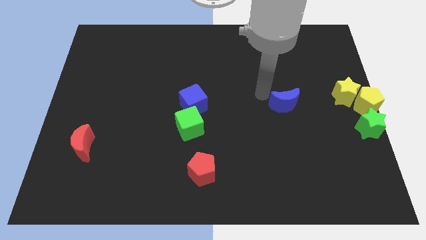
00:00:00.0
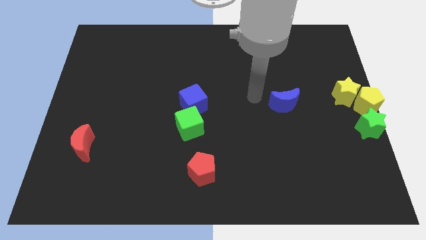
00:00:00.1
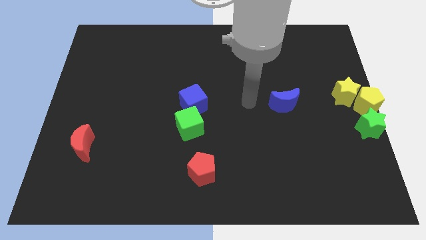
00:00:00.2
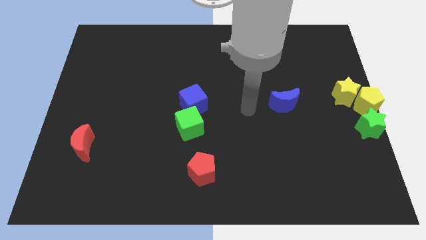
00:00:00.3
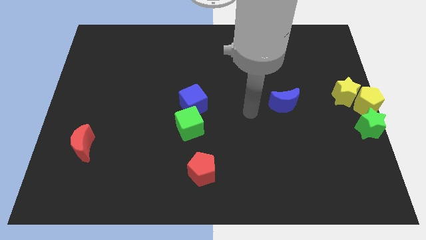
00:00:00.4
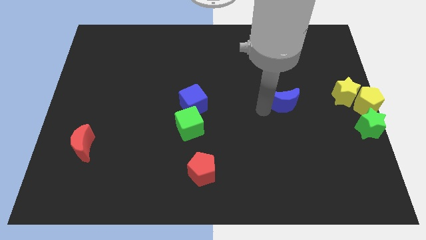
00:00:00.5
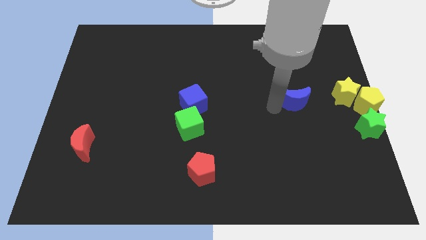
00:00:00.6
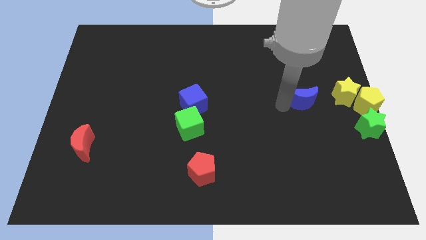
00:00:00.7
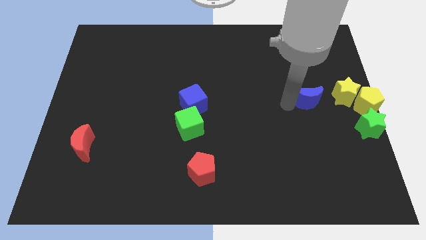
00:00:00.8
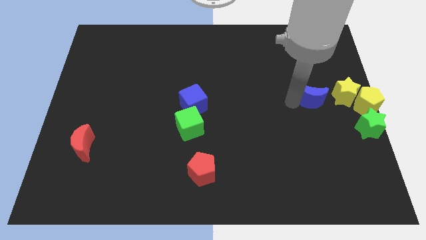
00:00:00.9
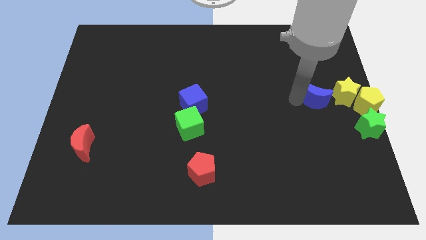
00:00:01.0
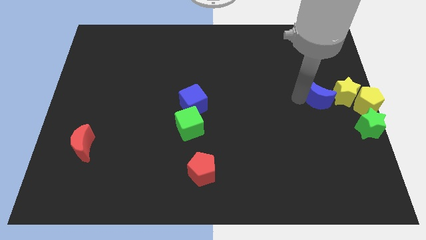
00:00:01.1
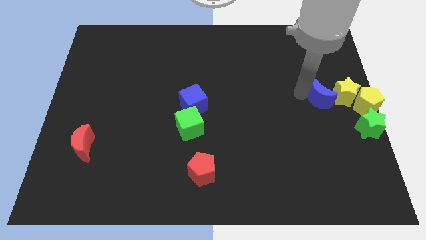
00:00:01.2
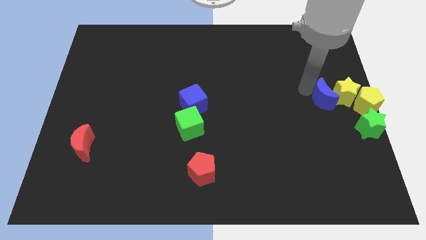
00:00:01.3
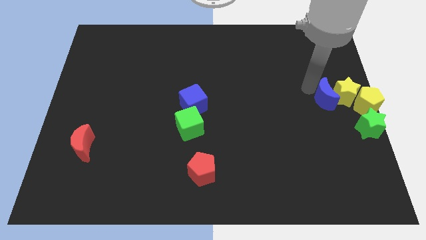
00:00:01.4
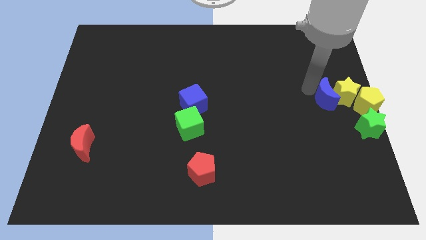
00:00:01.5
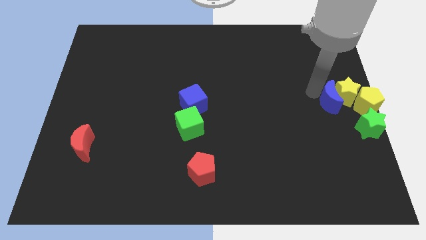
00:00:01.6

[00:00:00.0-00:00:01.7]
move blue moon close to yellow star

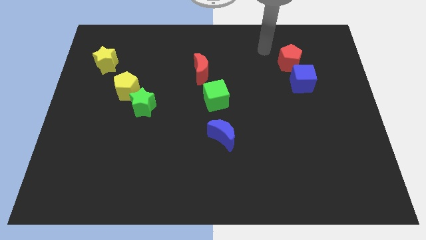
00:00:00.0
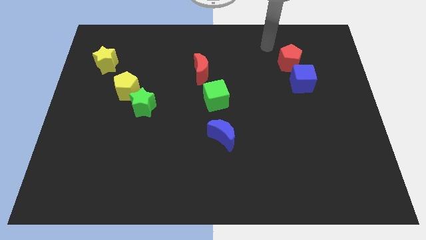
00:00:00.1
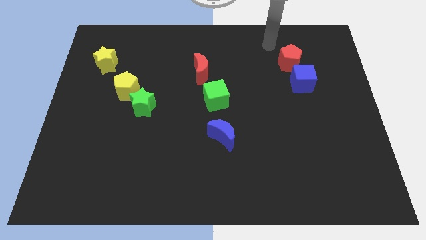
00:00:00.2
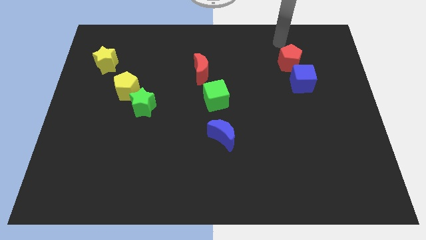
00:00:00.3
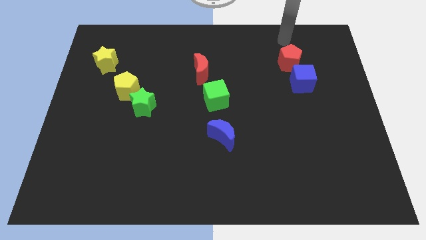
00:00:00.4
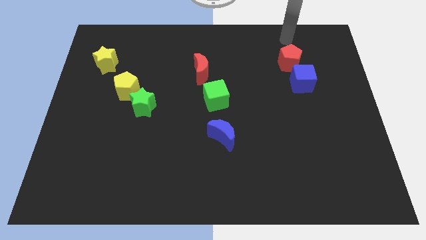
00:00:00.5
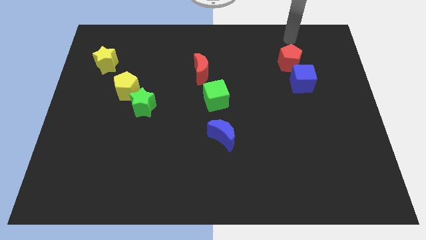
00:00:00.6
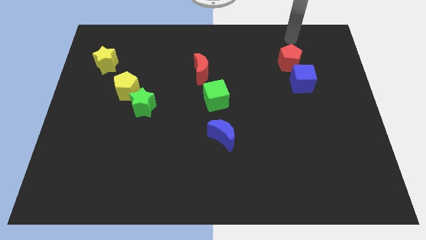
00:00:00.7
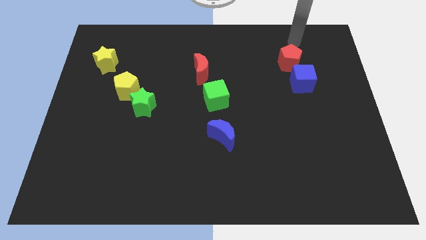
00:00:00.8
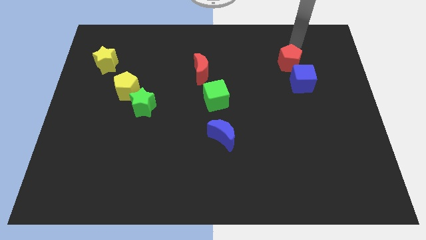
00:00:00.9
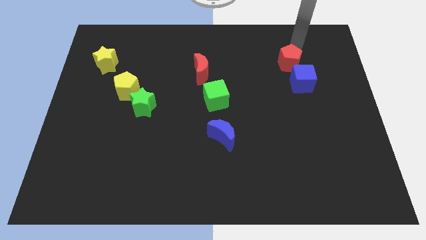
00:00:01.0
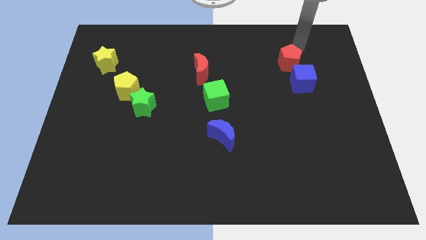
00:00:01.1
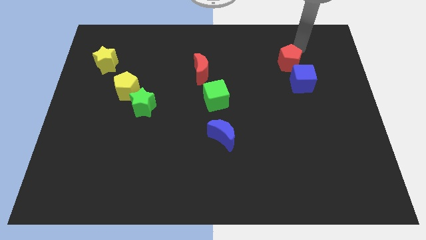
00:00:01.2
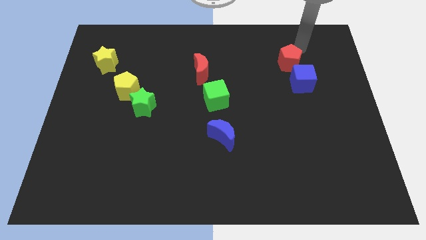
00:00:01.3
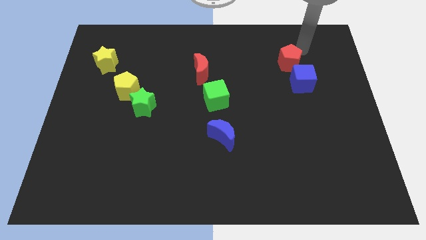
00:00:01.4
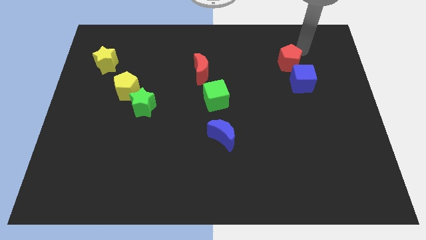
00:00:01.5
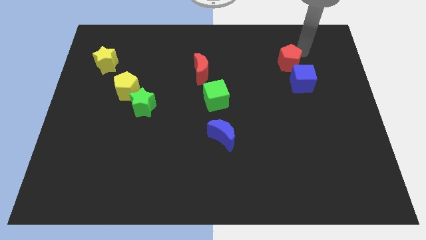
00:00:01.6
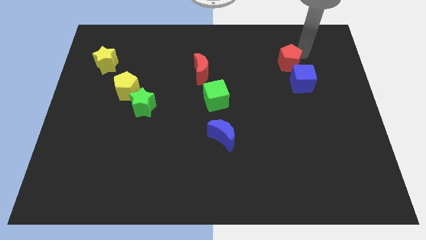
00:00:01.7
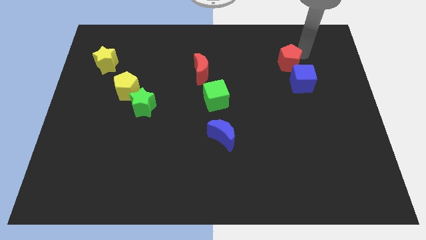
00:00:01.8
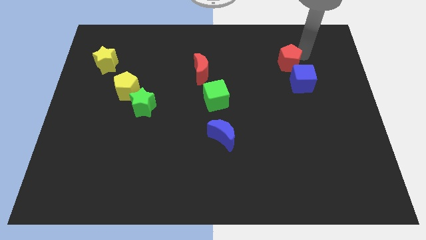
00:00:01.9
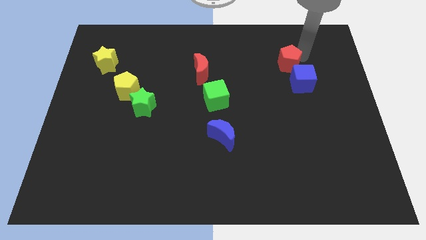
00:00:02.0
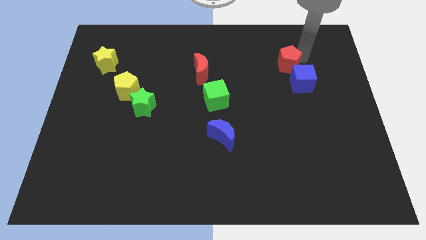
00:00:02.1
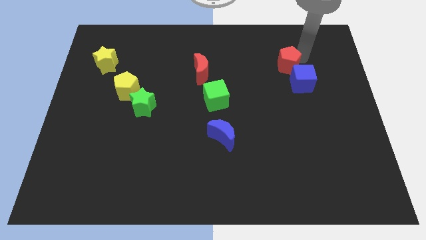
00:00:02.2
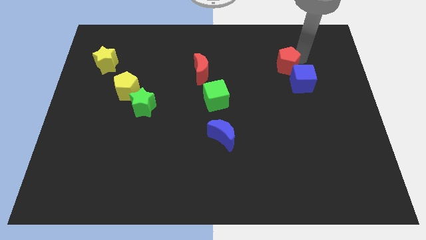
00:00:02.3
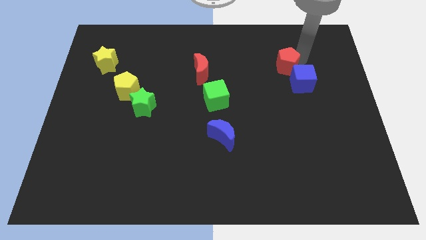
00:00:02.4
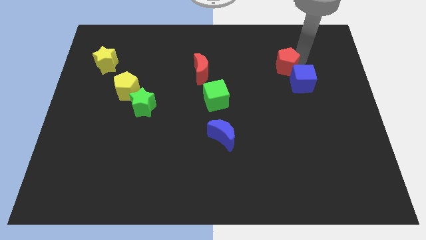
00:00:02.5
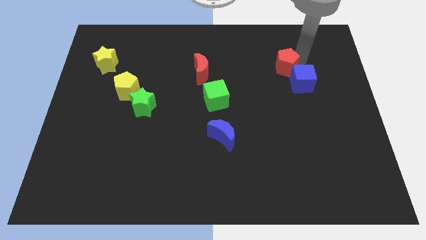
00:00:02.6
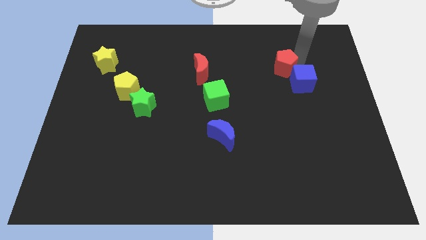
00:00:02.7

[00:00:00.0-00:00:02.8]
push the red pentagon slightly to the bottom of the board

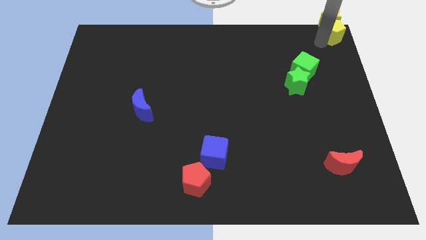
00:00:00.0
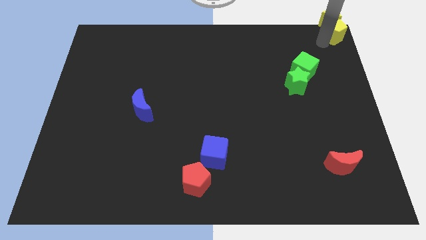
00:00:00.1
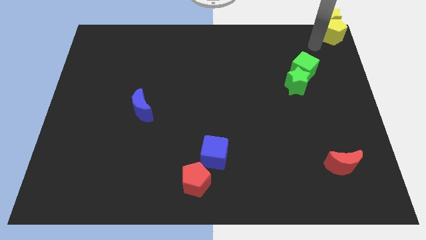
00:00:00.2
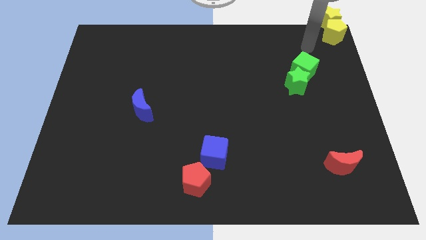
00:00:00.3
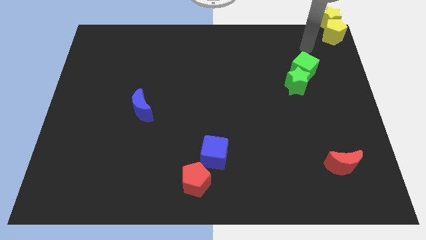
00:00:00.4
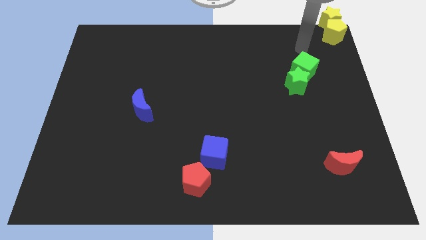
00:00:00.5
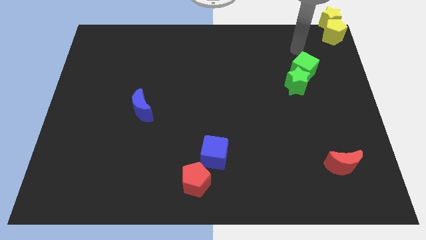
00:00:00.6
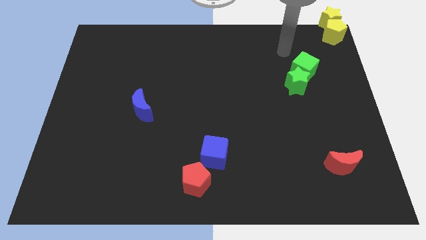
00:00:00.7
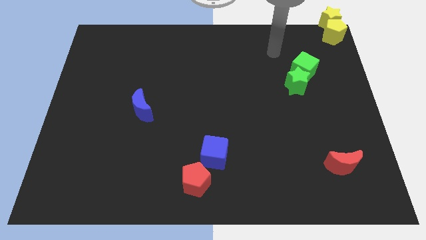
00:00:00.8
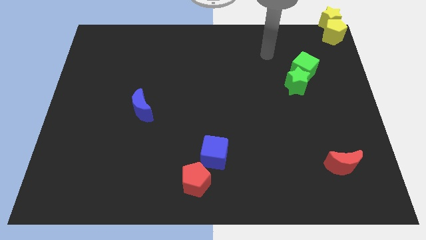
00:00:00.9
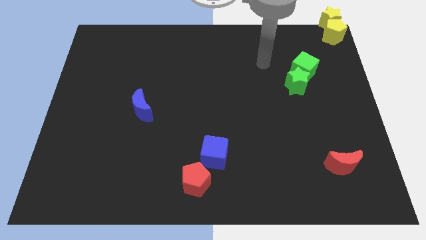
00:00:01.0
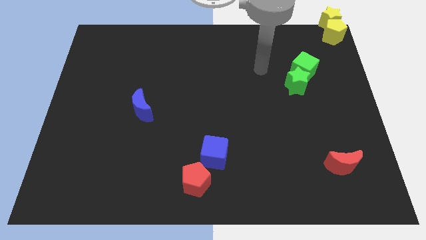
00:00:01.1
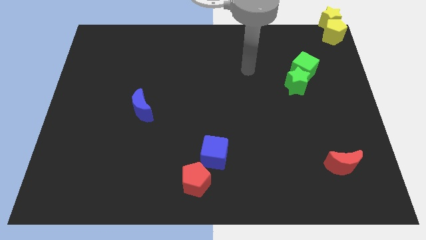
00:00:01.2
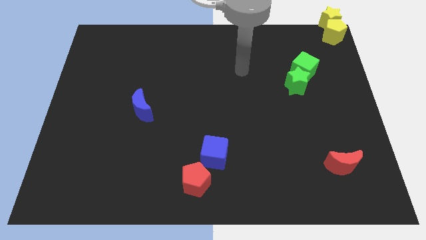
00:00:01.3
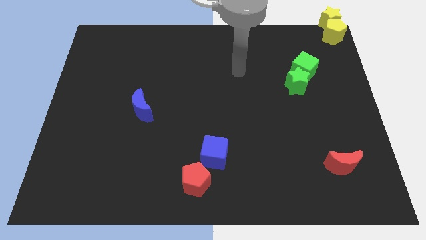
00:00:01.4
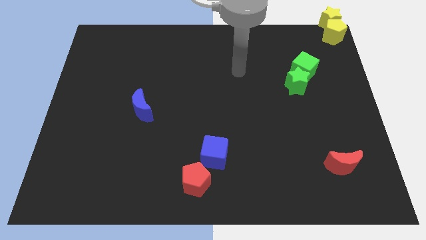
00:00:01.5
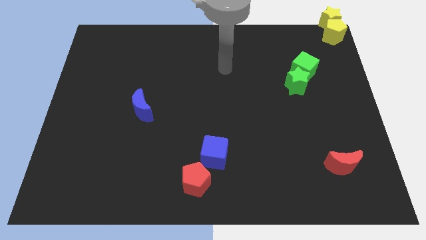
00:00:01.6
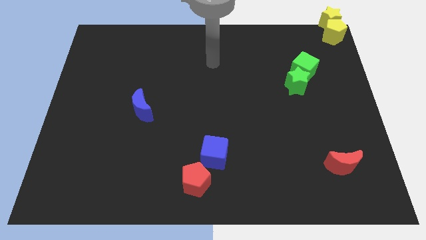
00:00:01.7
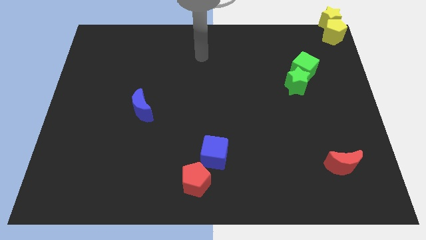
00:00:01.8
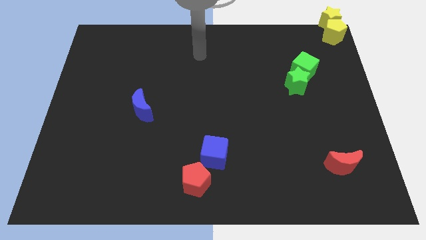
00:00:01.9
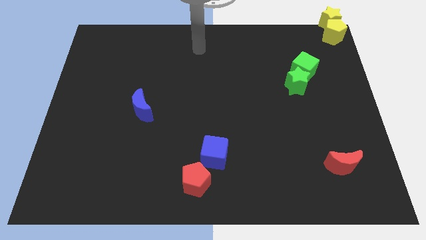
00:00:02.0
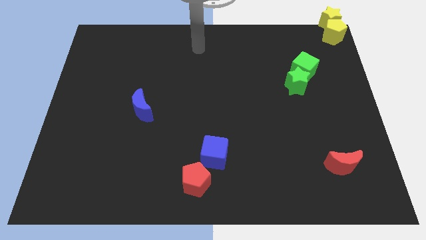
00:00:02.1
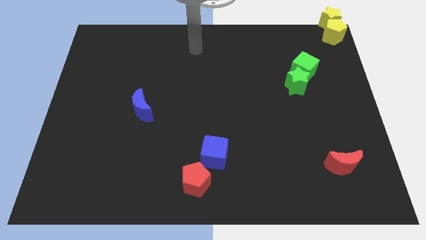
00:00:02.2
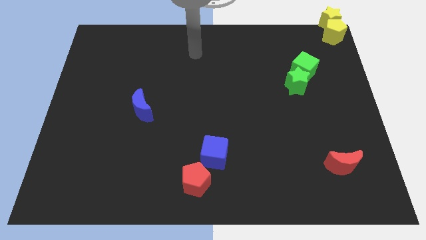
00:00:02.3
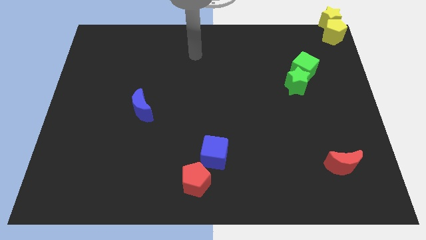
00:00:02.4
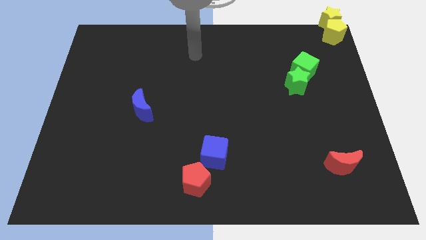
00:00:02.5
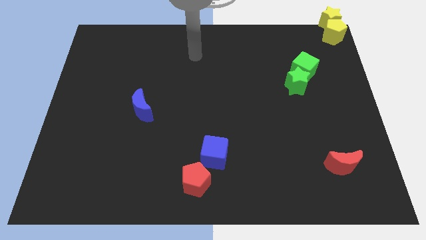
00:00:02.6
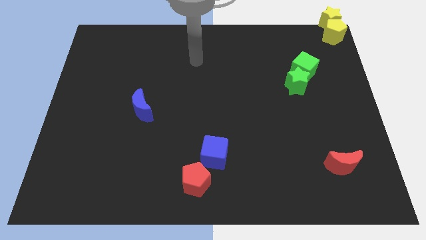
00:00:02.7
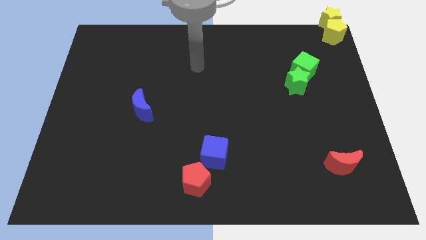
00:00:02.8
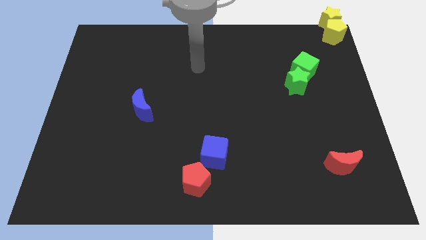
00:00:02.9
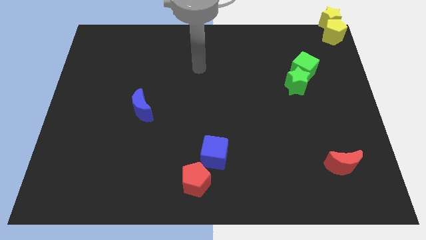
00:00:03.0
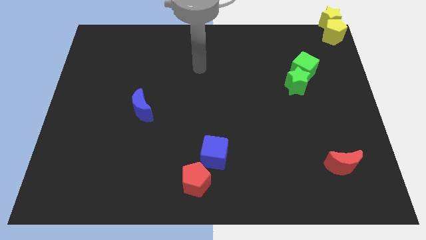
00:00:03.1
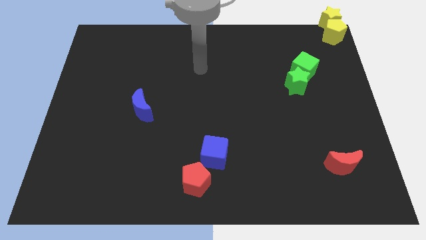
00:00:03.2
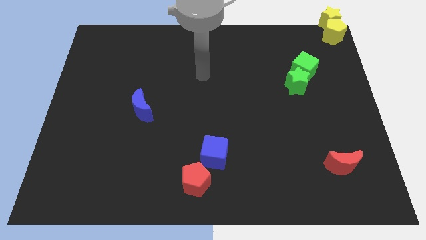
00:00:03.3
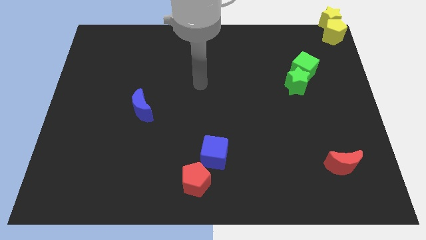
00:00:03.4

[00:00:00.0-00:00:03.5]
move your arm away from the yellow pentagon

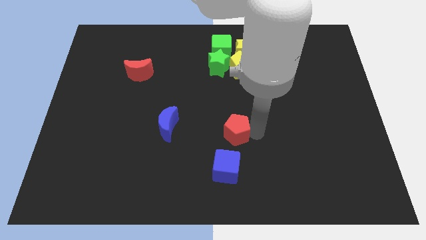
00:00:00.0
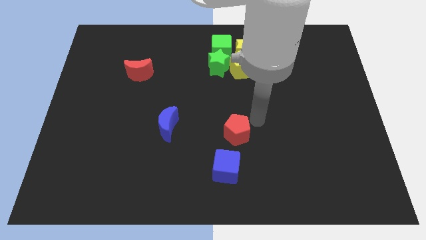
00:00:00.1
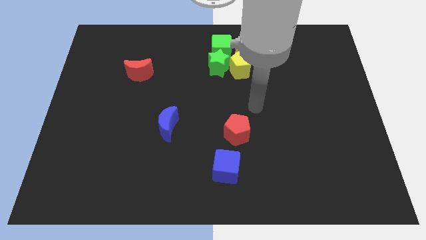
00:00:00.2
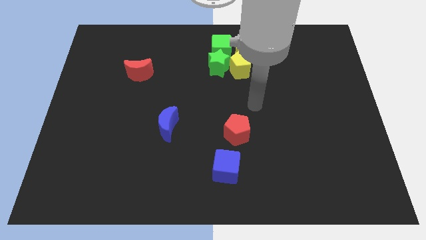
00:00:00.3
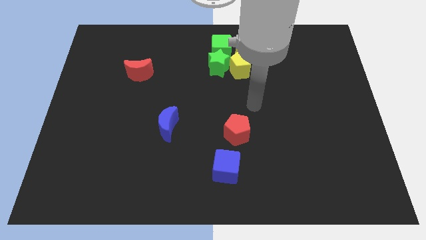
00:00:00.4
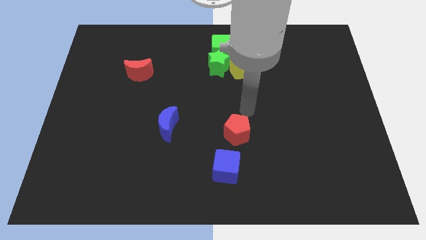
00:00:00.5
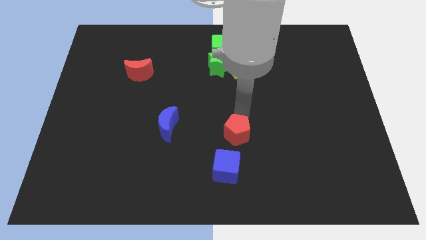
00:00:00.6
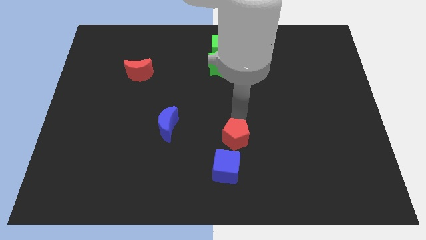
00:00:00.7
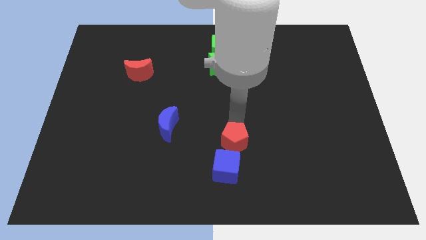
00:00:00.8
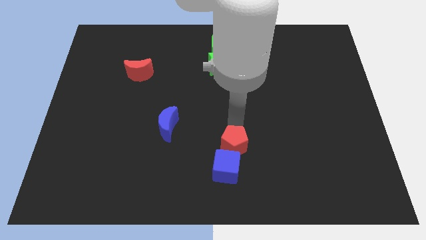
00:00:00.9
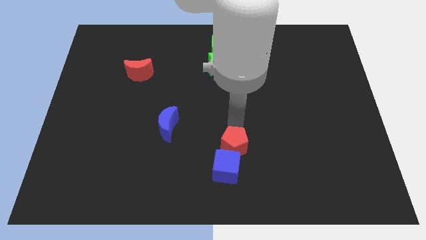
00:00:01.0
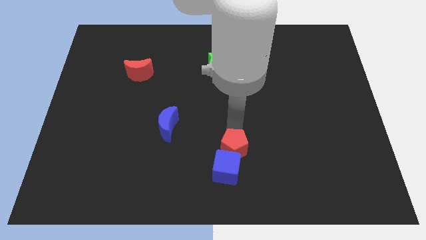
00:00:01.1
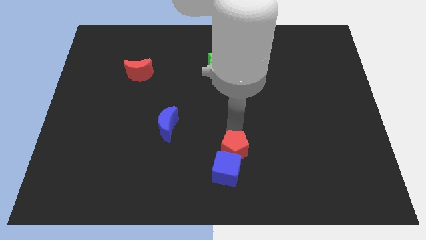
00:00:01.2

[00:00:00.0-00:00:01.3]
push the red pentagon into the blue cube
